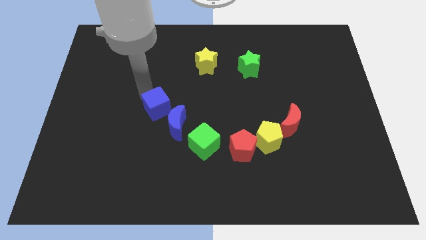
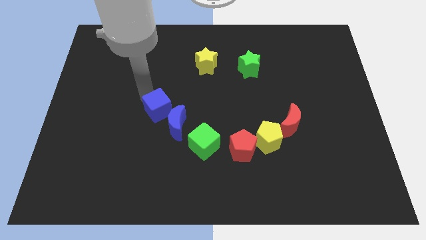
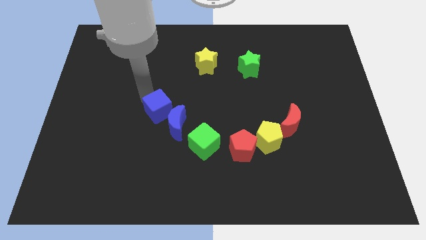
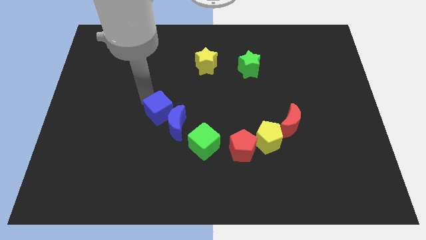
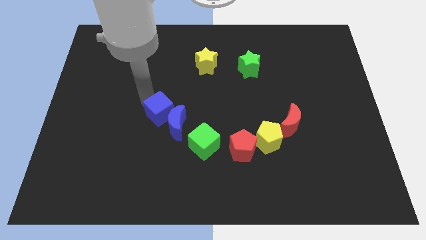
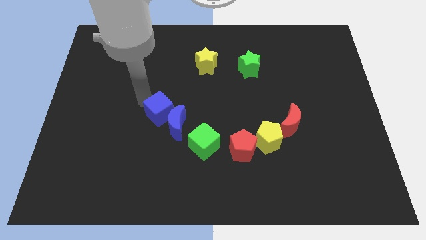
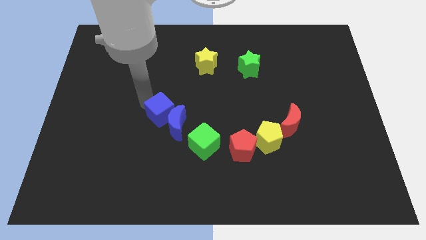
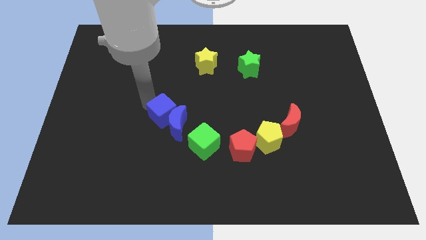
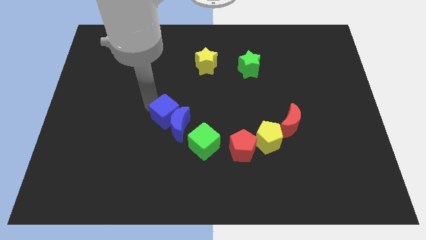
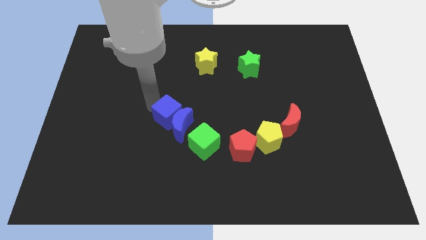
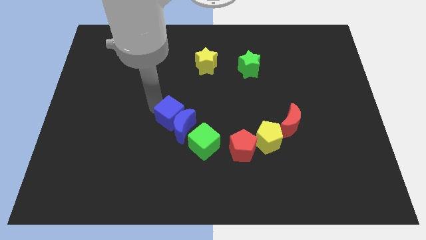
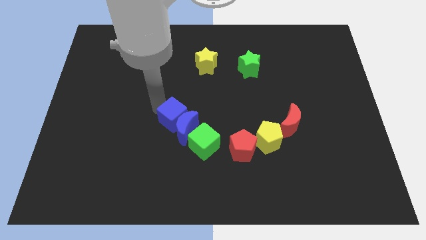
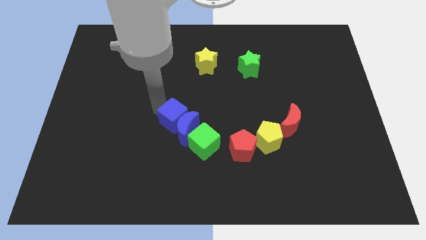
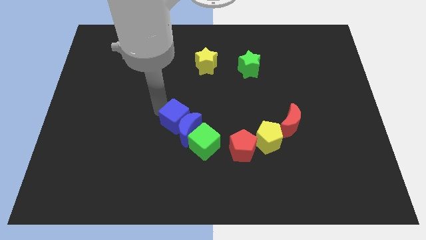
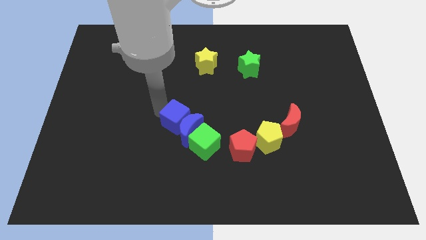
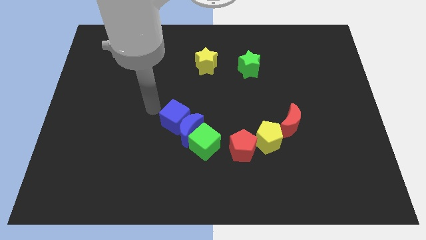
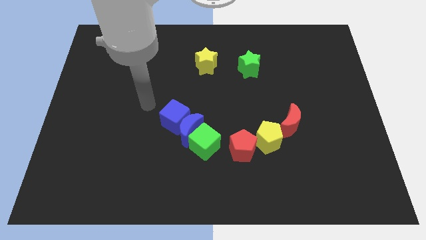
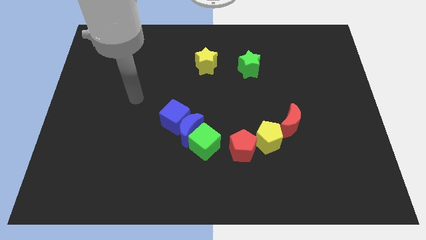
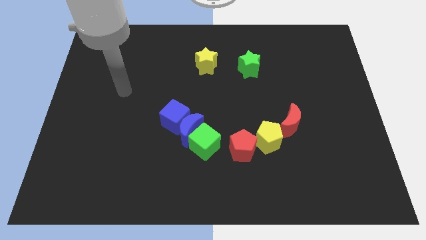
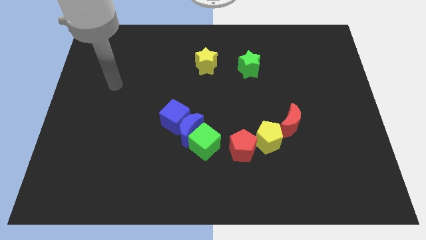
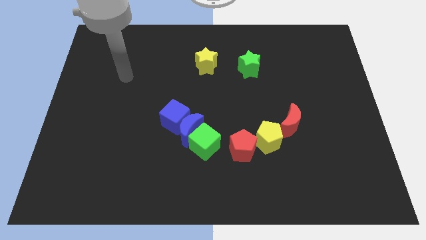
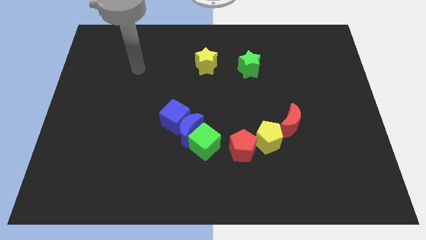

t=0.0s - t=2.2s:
push the blue blocks into the green cube

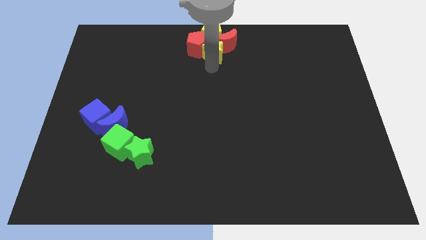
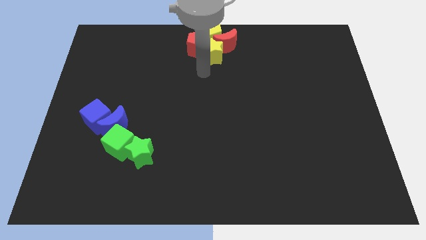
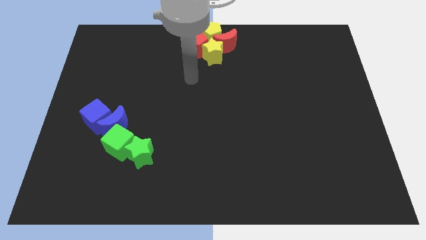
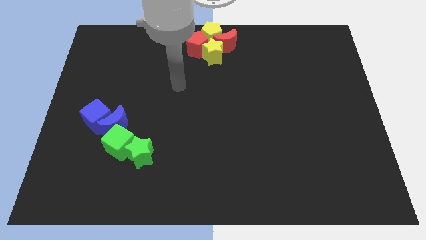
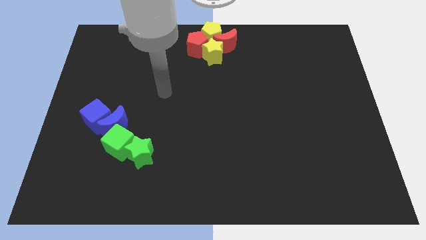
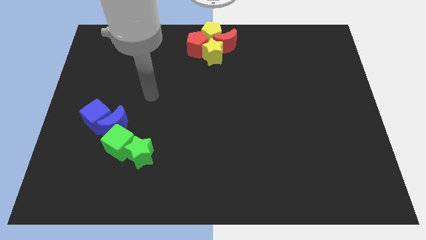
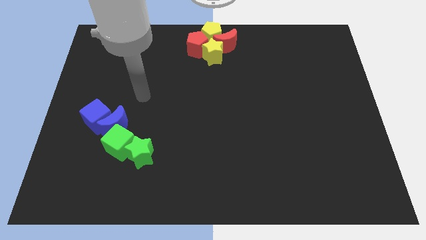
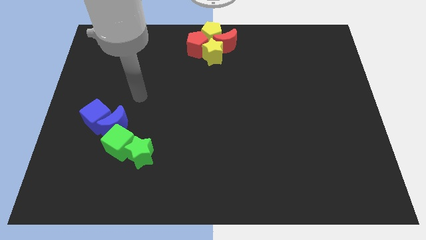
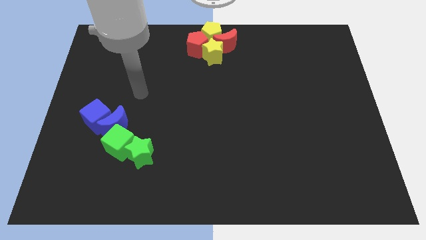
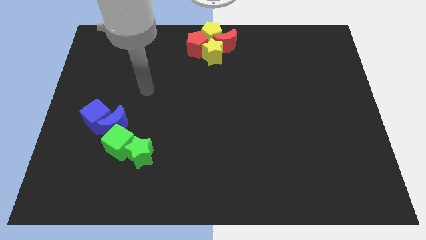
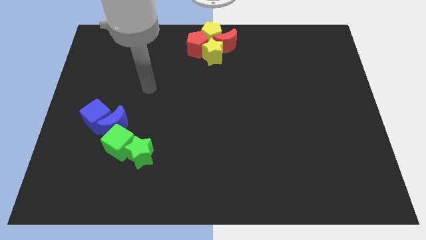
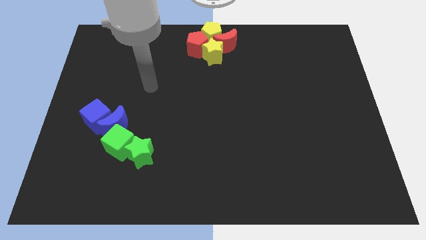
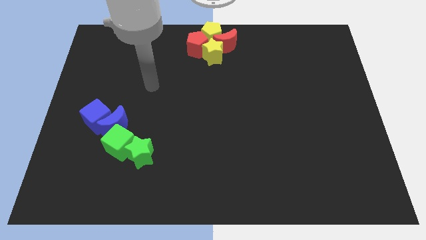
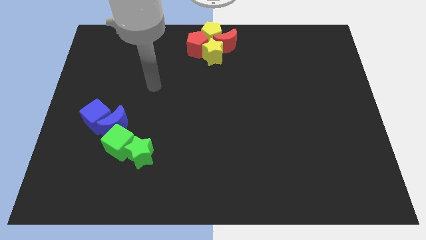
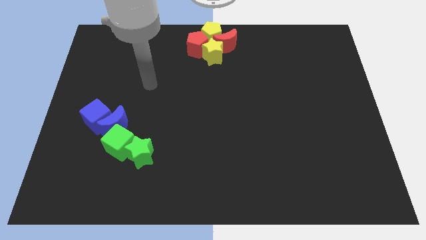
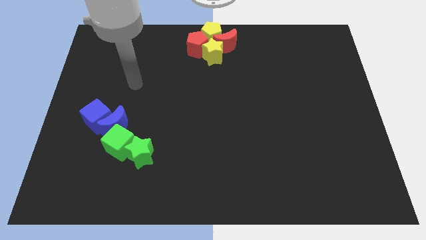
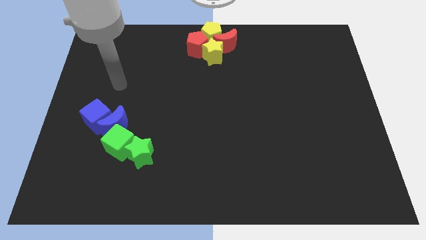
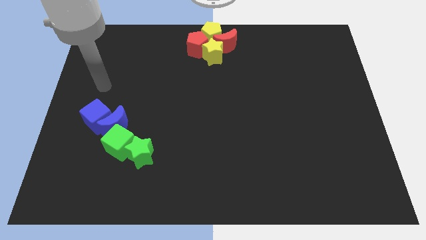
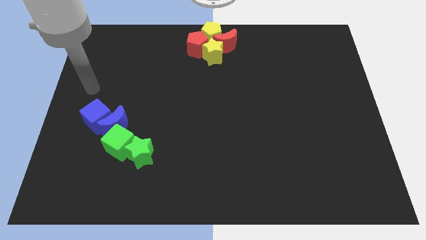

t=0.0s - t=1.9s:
drag your arm to the center right

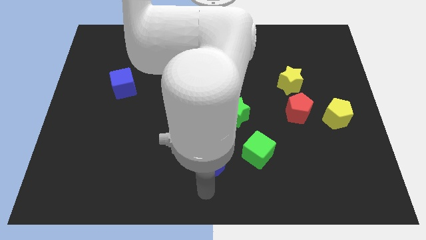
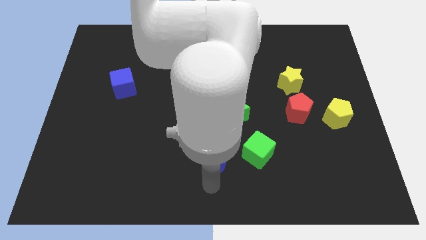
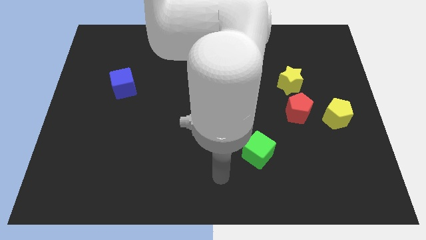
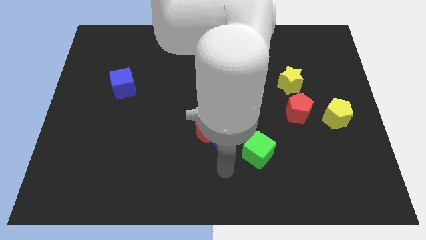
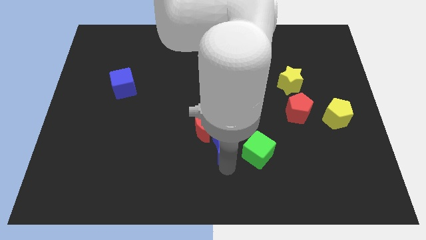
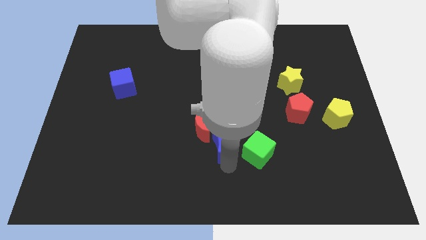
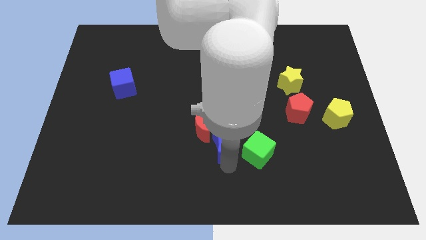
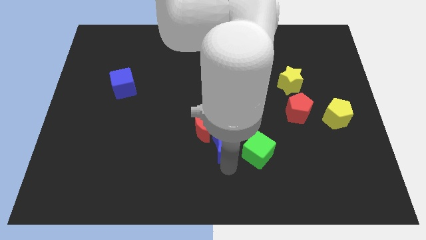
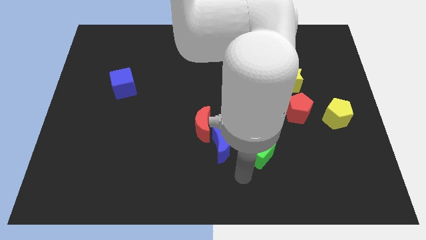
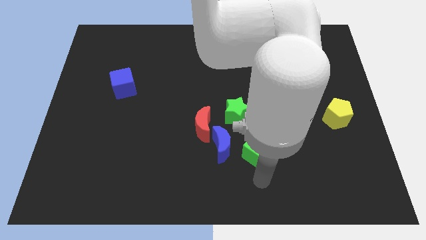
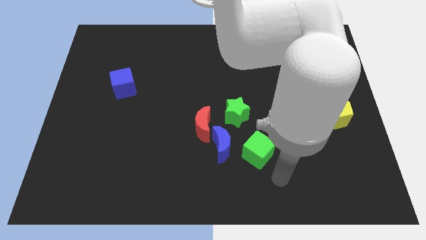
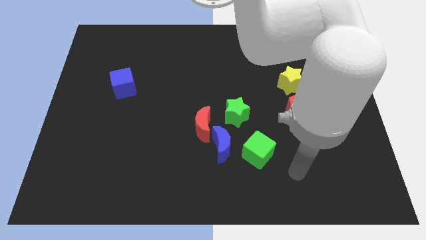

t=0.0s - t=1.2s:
slide the blue moon slightly upwards

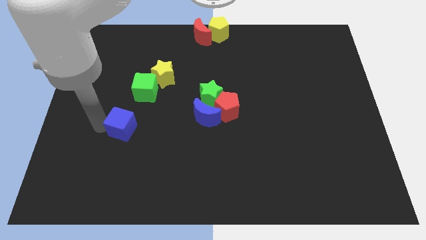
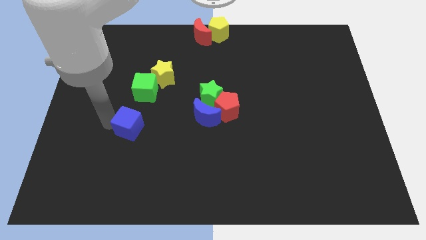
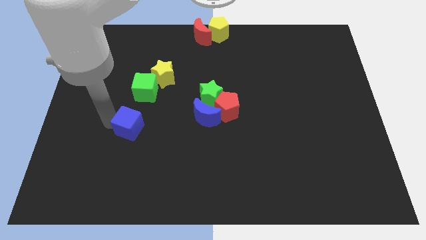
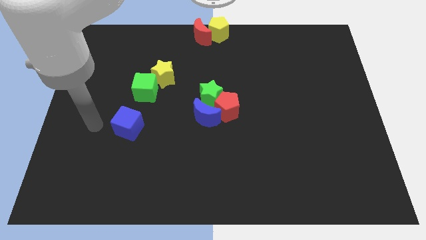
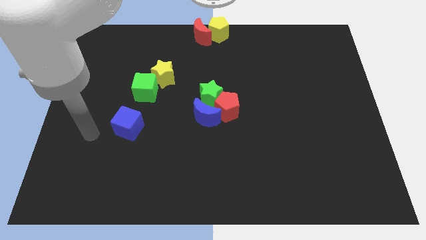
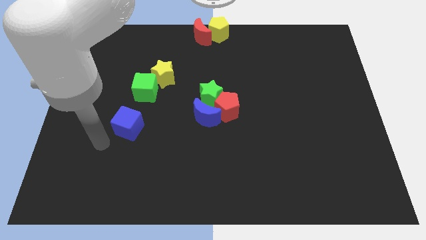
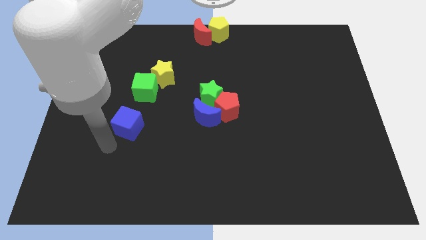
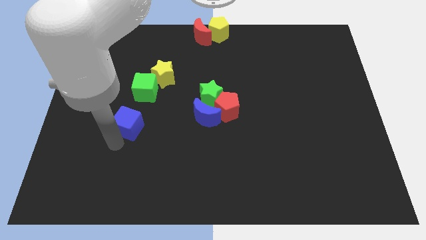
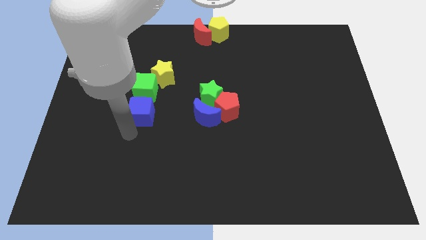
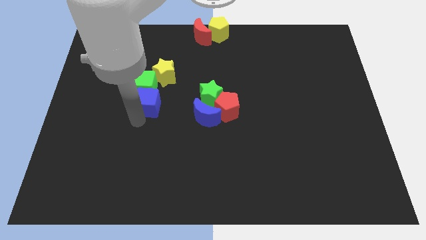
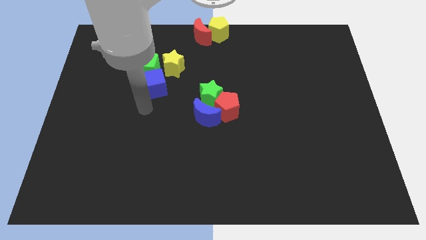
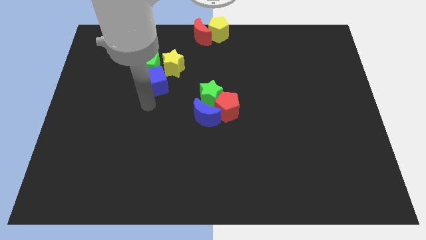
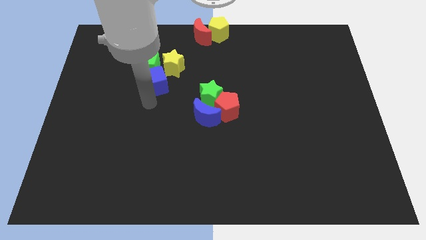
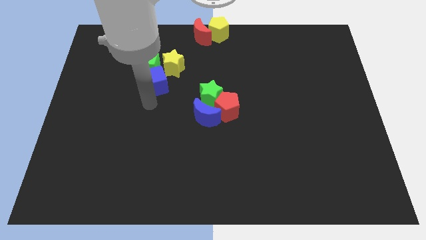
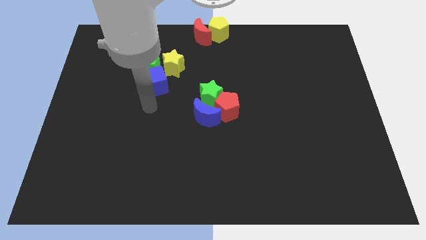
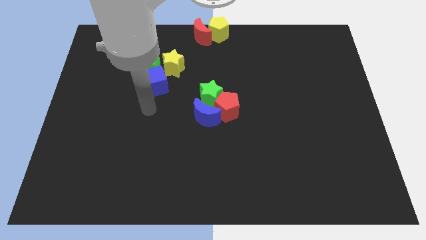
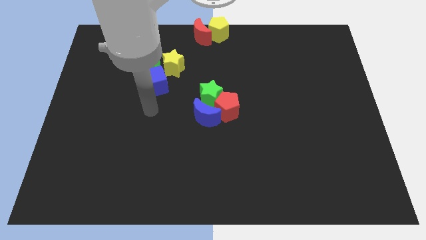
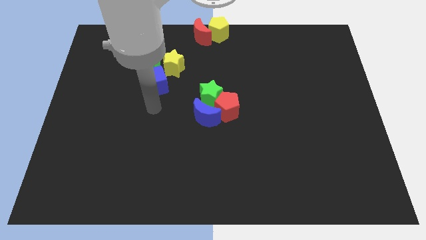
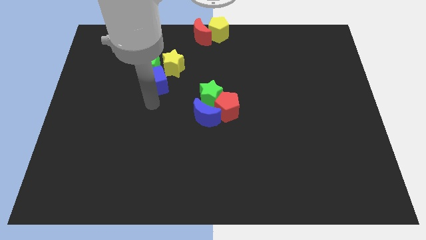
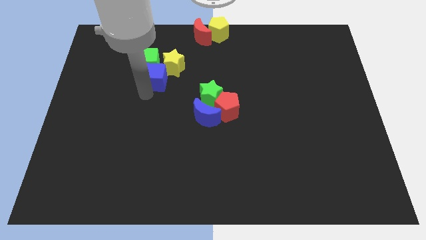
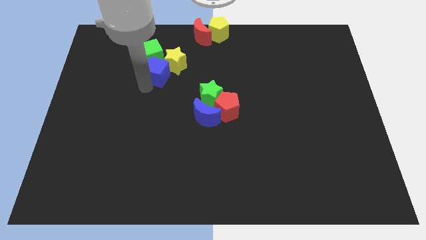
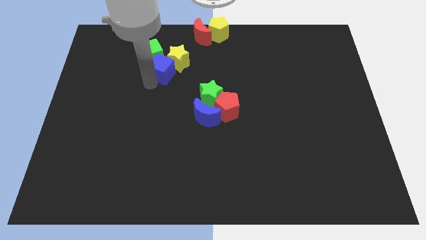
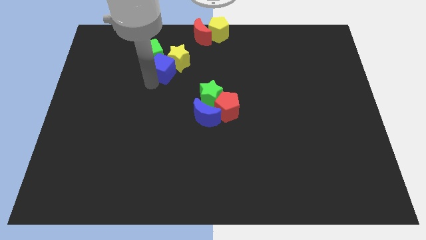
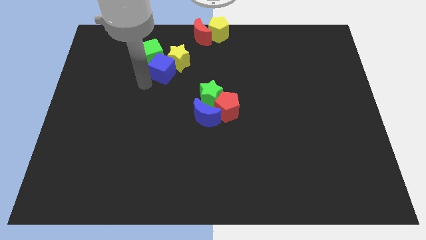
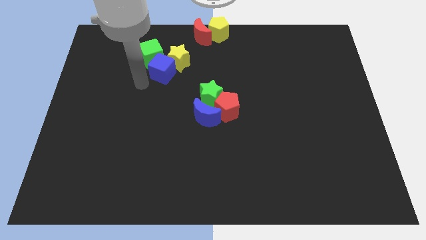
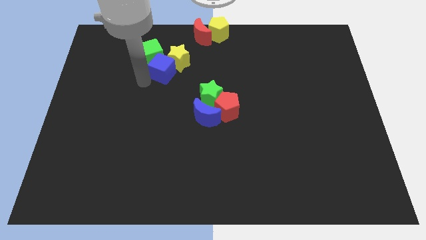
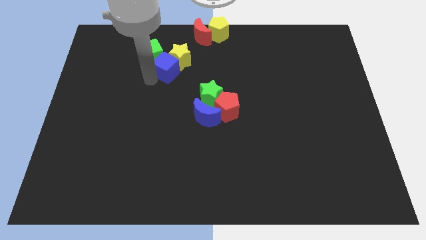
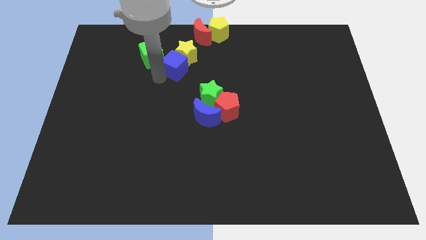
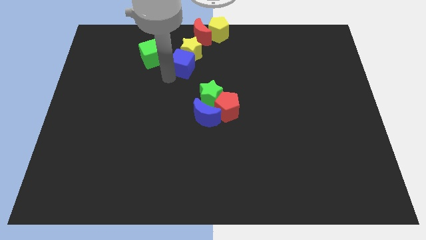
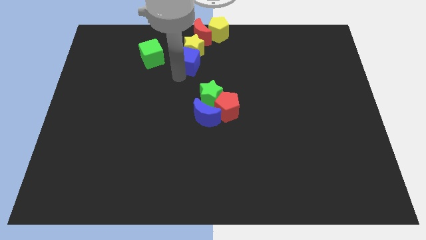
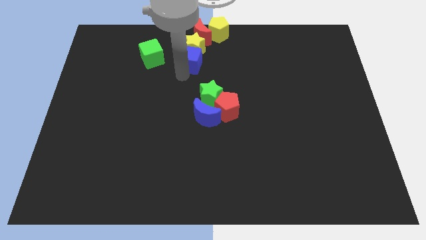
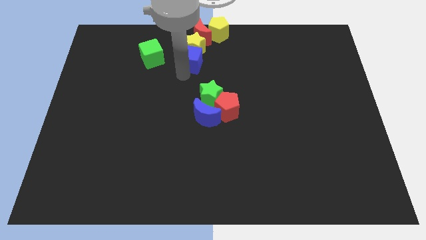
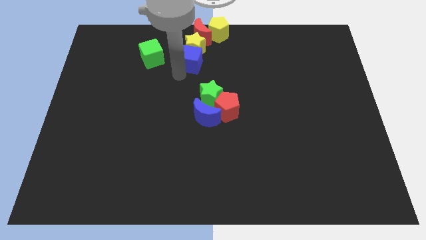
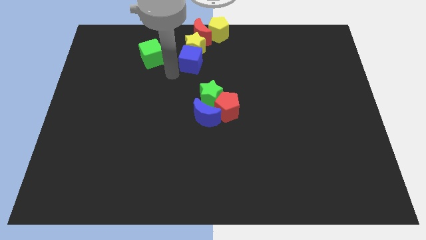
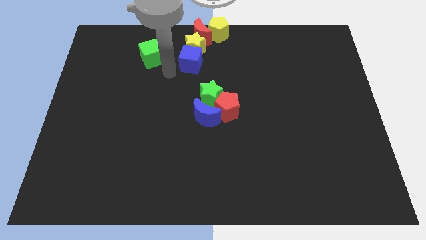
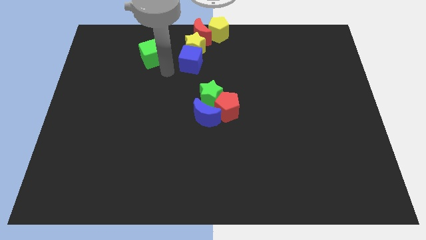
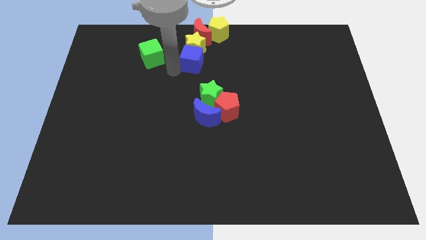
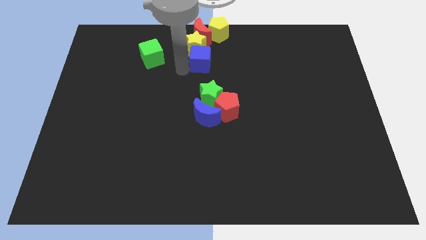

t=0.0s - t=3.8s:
push blue cube towards the group of blocks at the top center of the board
